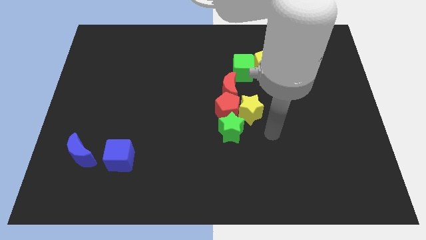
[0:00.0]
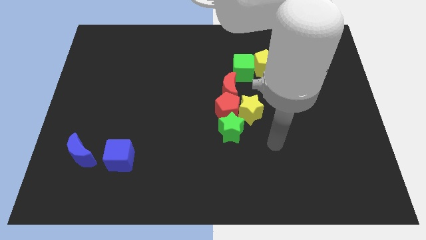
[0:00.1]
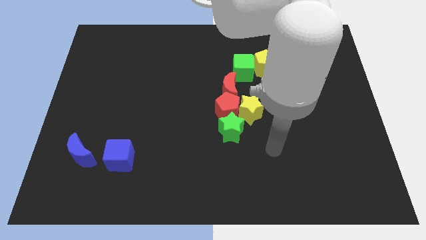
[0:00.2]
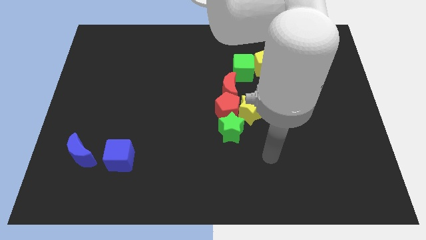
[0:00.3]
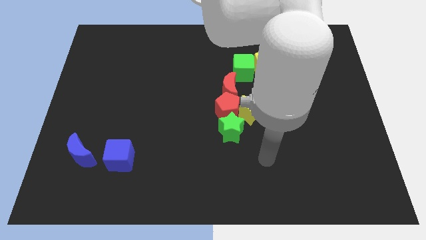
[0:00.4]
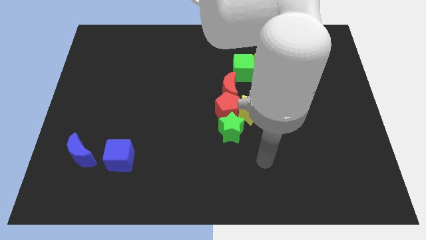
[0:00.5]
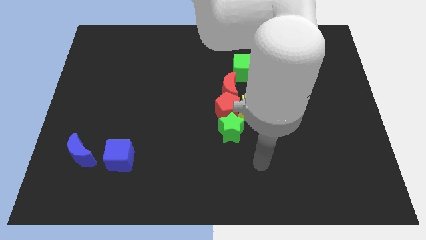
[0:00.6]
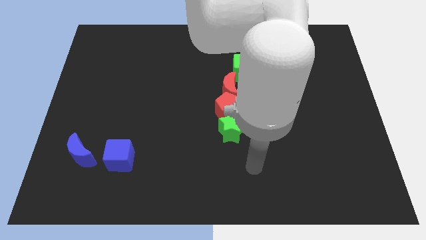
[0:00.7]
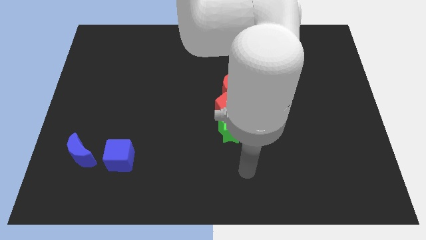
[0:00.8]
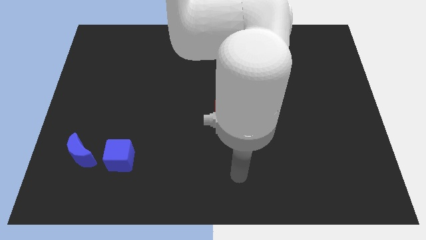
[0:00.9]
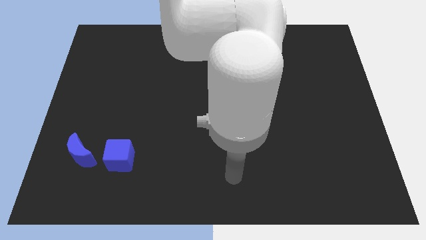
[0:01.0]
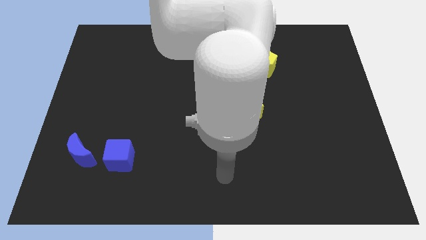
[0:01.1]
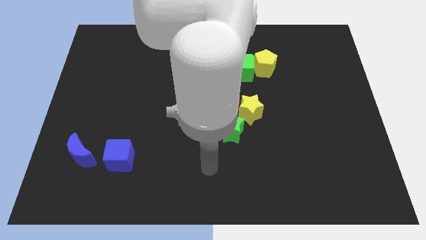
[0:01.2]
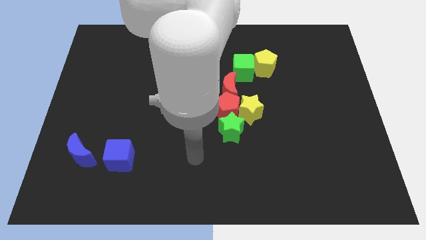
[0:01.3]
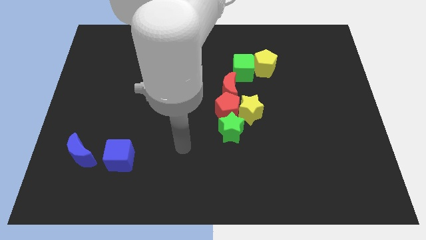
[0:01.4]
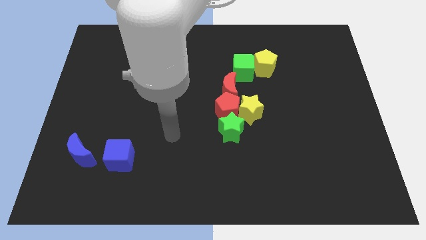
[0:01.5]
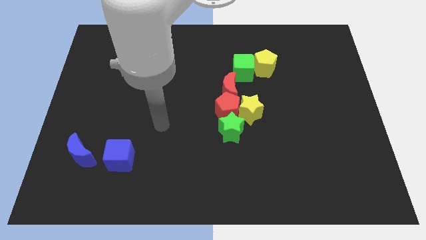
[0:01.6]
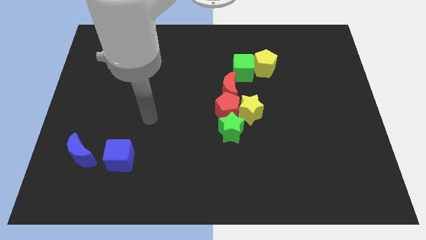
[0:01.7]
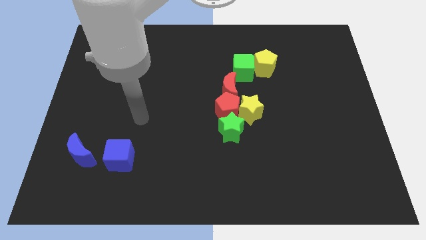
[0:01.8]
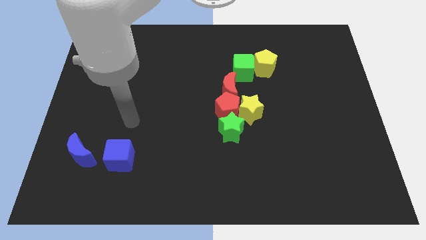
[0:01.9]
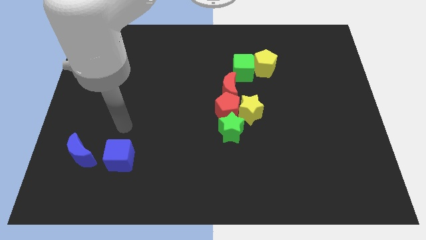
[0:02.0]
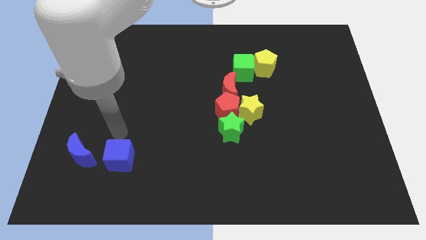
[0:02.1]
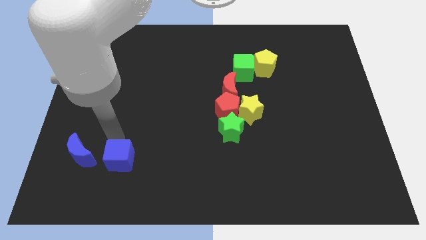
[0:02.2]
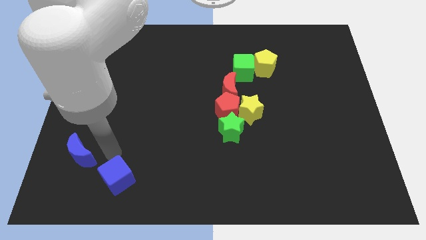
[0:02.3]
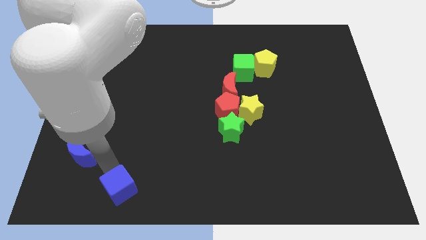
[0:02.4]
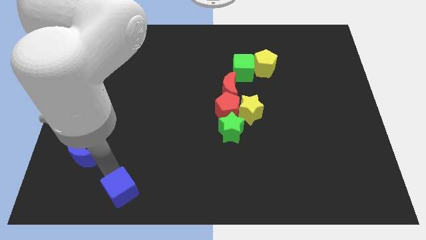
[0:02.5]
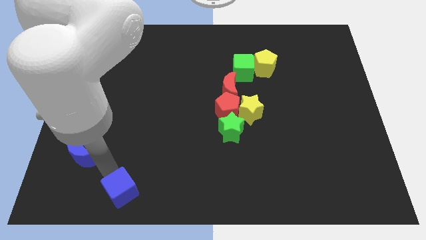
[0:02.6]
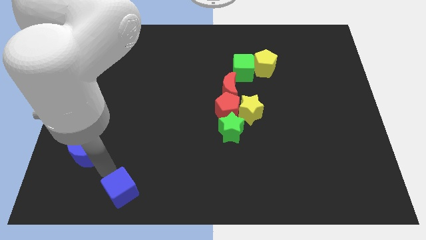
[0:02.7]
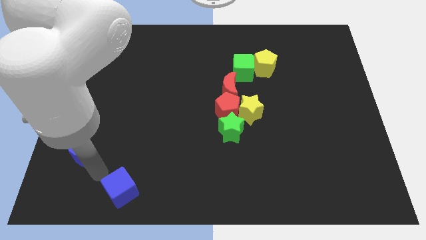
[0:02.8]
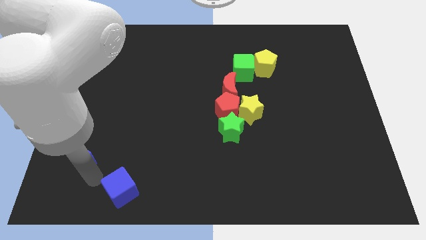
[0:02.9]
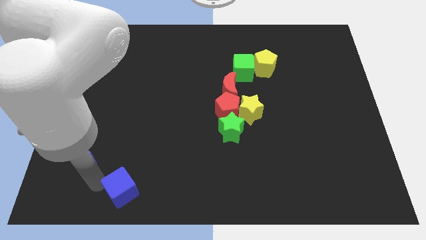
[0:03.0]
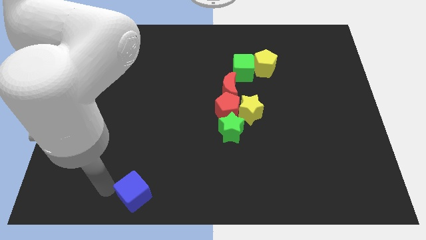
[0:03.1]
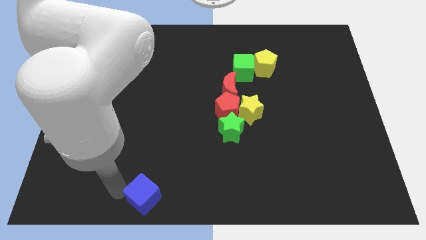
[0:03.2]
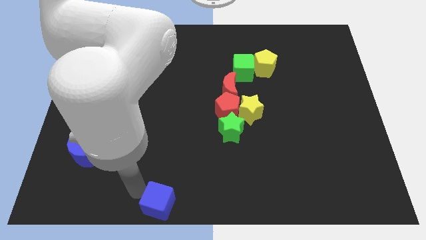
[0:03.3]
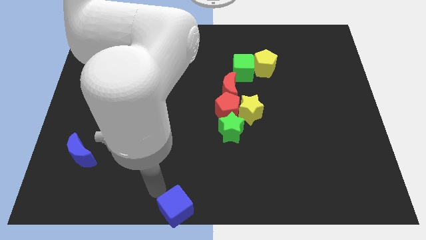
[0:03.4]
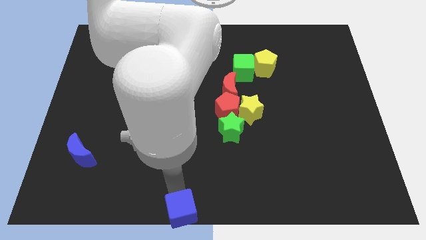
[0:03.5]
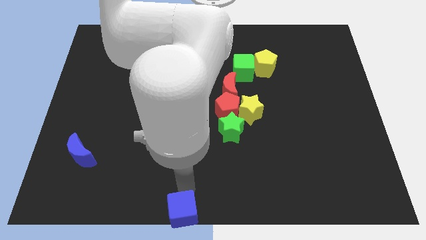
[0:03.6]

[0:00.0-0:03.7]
push the blue cube towards the bottom center

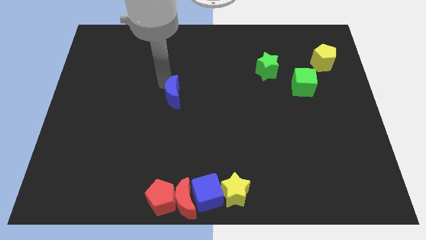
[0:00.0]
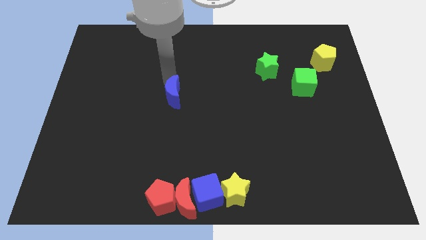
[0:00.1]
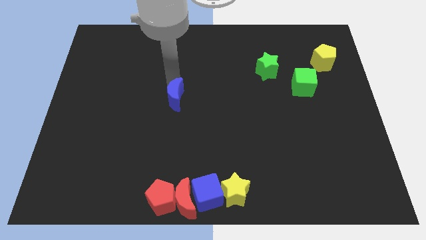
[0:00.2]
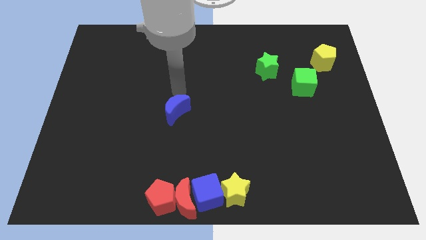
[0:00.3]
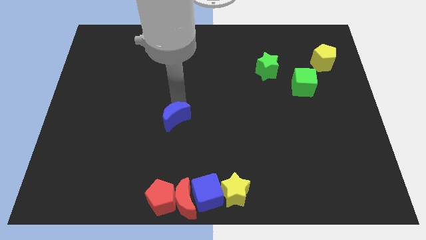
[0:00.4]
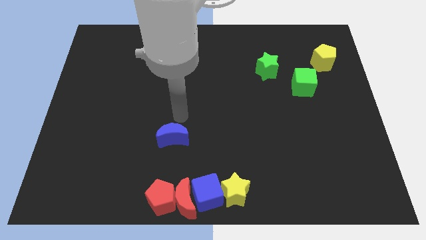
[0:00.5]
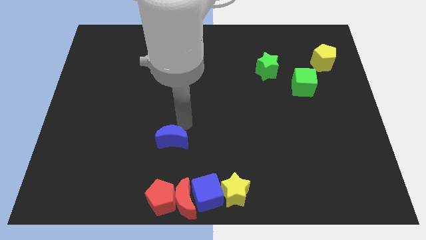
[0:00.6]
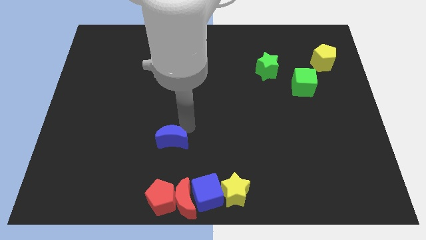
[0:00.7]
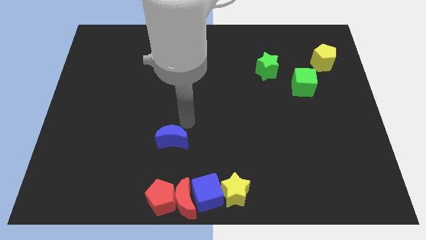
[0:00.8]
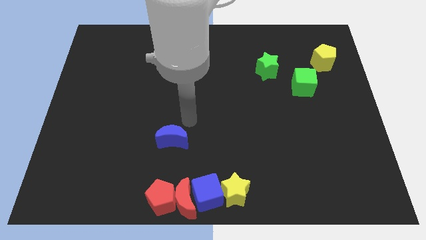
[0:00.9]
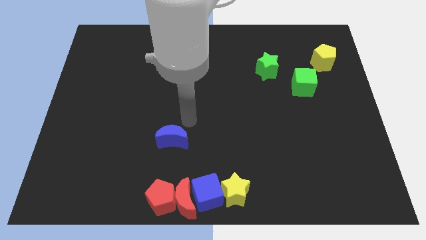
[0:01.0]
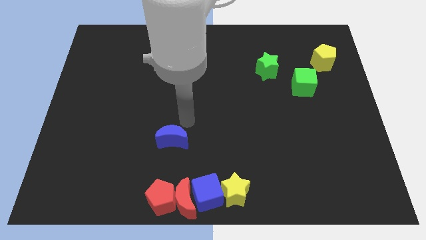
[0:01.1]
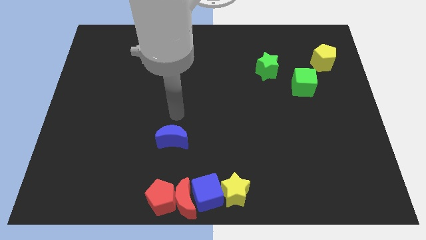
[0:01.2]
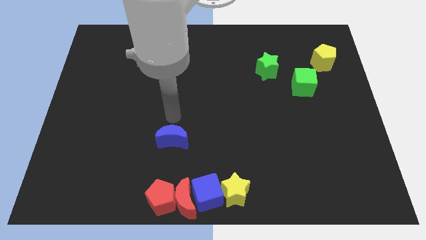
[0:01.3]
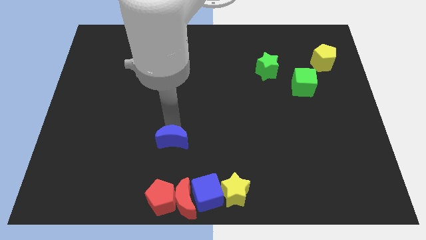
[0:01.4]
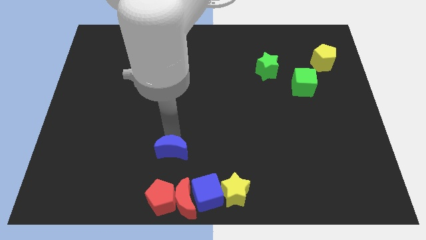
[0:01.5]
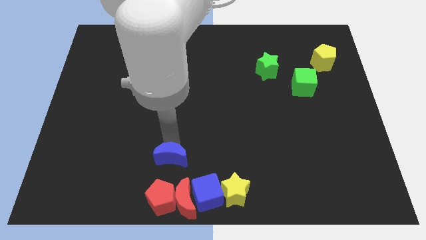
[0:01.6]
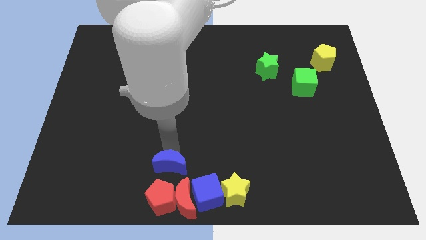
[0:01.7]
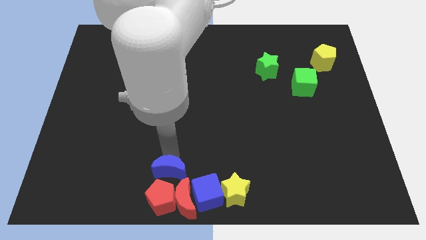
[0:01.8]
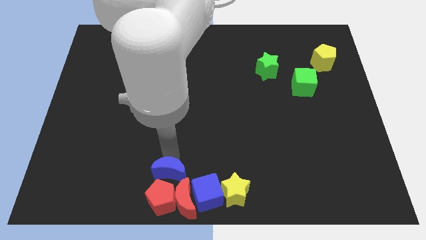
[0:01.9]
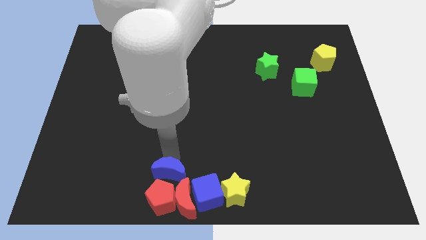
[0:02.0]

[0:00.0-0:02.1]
place blue moon on top of red pentagon and red half moon

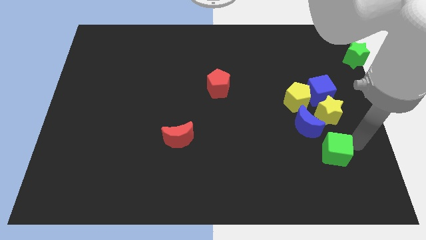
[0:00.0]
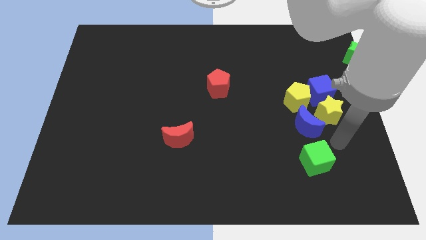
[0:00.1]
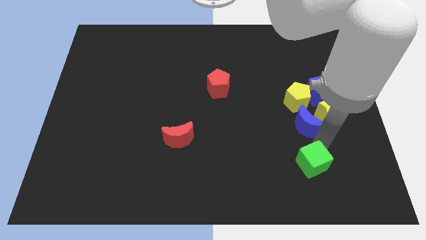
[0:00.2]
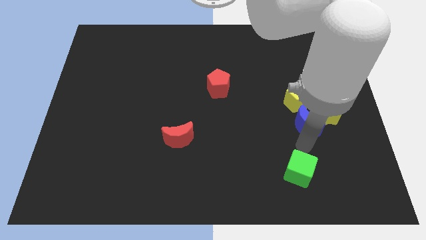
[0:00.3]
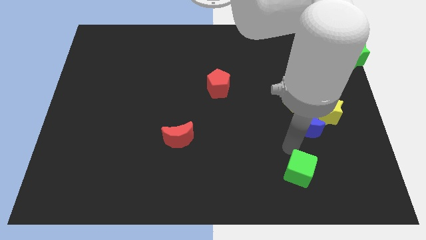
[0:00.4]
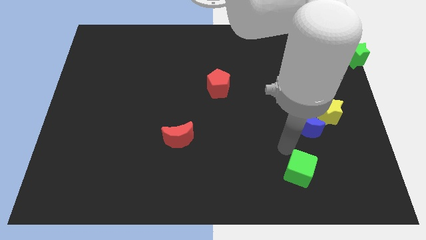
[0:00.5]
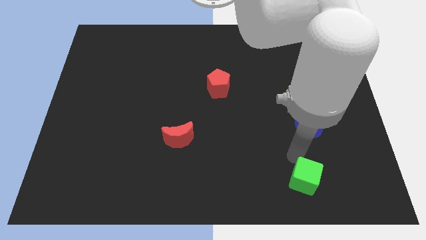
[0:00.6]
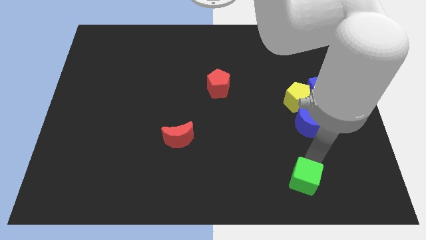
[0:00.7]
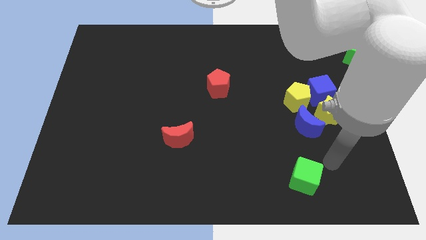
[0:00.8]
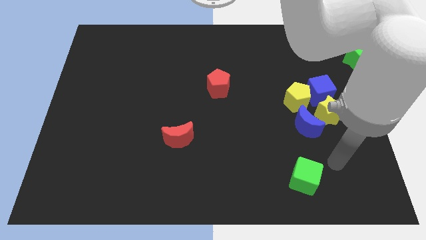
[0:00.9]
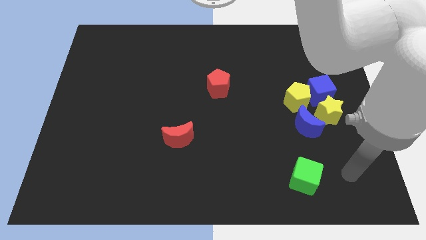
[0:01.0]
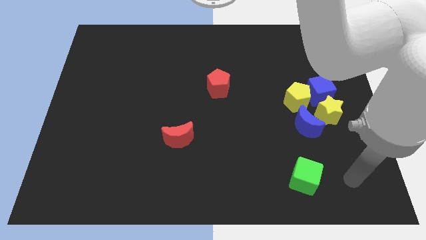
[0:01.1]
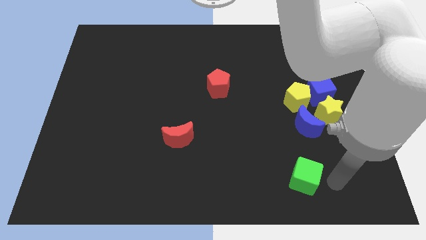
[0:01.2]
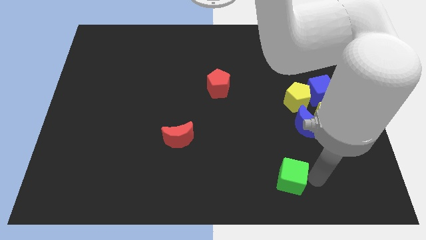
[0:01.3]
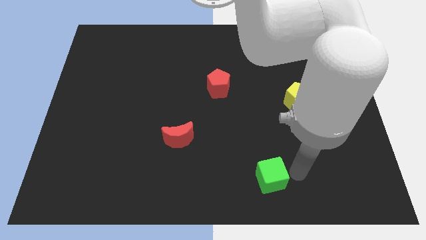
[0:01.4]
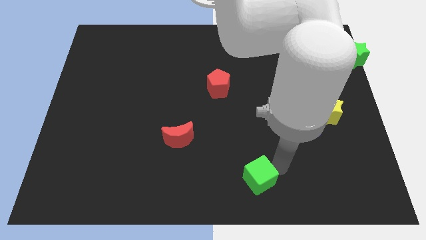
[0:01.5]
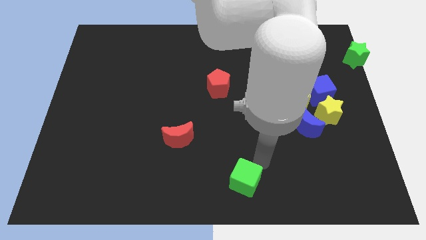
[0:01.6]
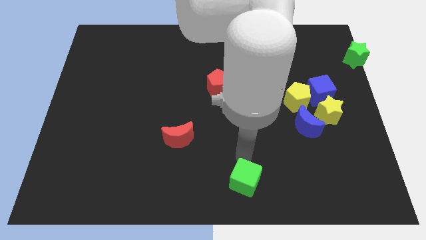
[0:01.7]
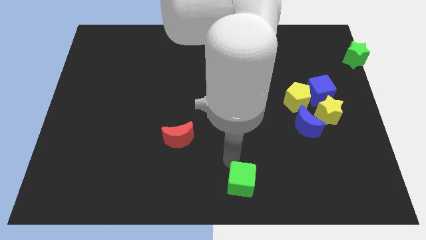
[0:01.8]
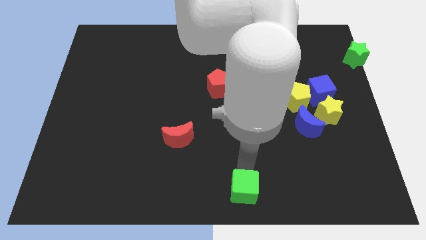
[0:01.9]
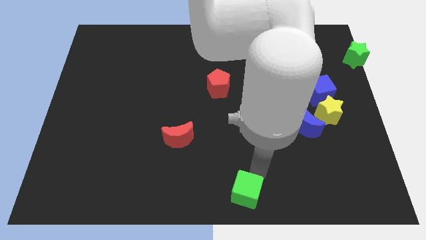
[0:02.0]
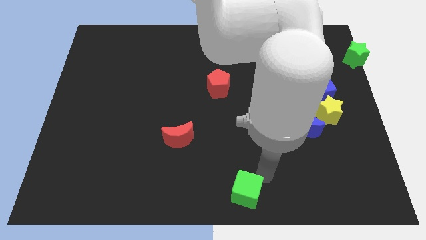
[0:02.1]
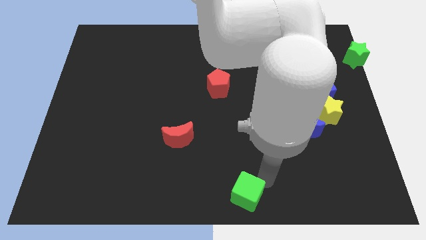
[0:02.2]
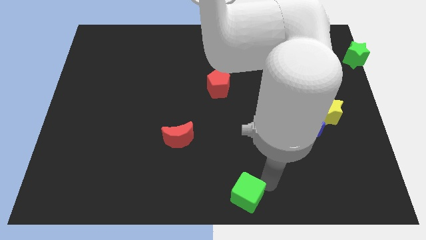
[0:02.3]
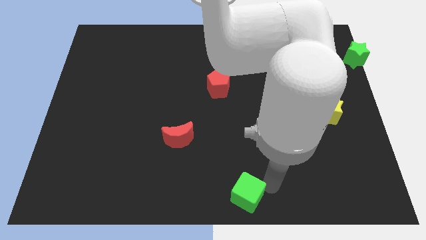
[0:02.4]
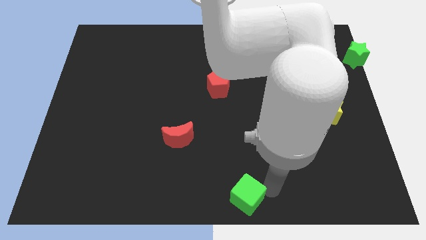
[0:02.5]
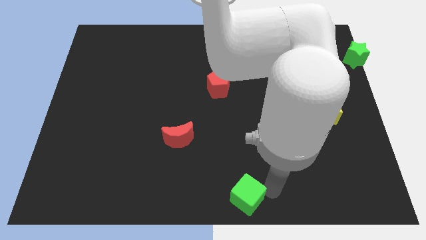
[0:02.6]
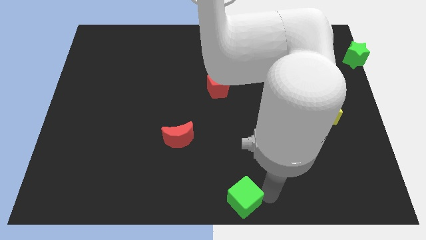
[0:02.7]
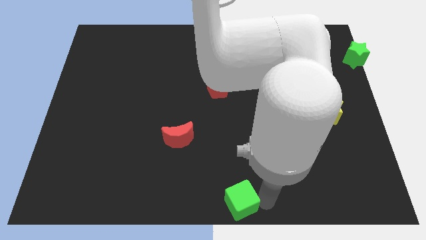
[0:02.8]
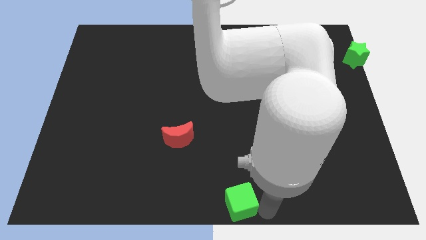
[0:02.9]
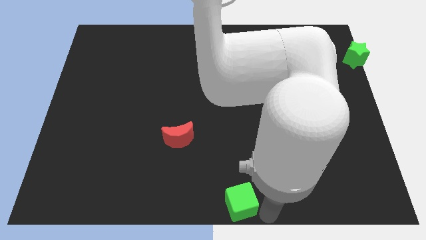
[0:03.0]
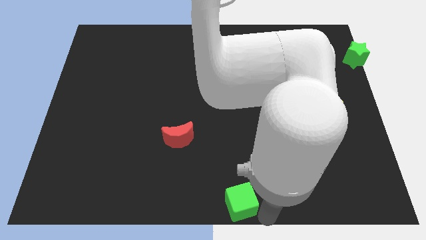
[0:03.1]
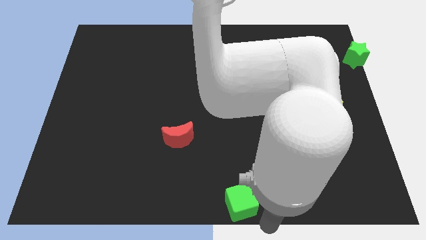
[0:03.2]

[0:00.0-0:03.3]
push the green cube downwards
